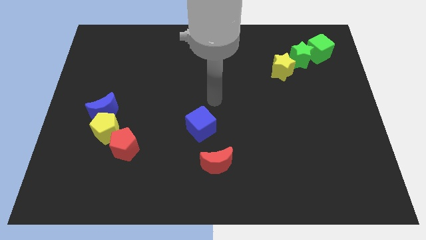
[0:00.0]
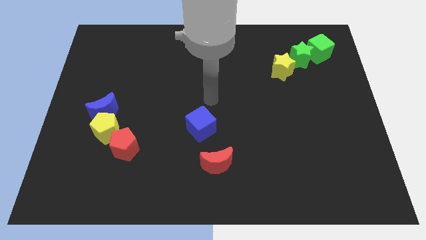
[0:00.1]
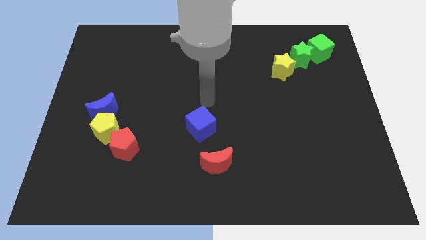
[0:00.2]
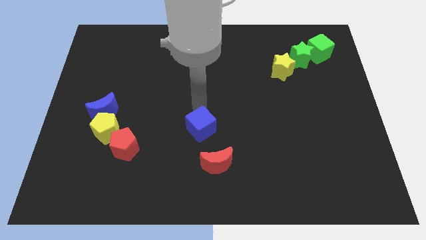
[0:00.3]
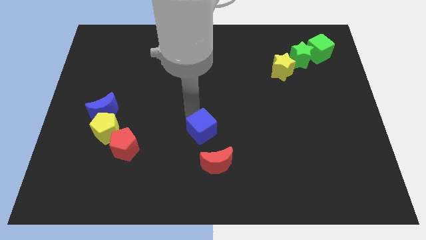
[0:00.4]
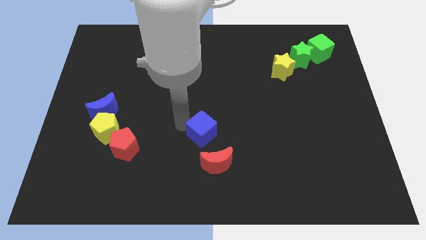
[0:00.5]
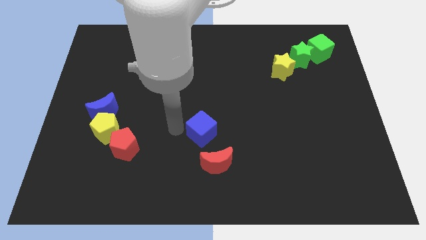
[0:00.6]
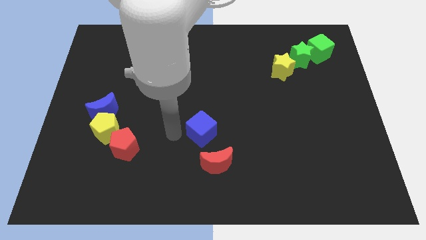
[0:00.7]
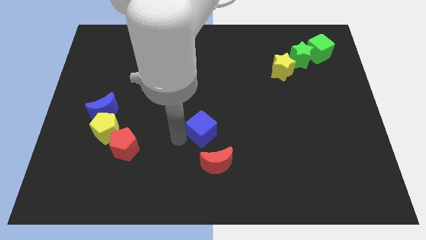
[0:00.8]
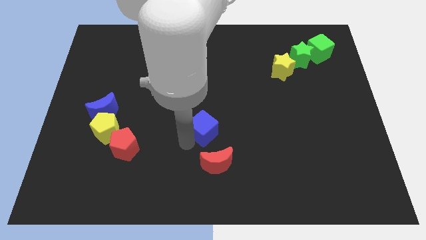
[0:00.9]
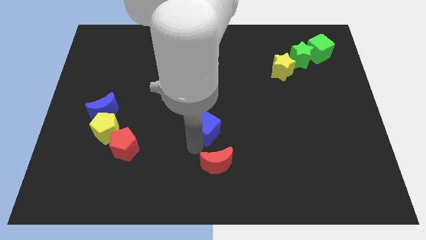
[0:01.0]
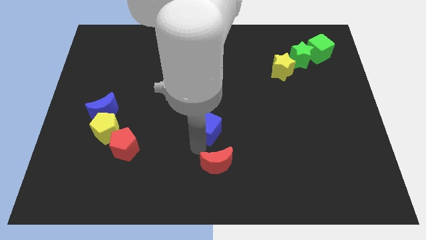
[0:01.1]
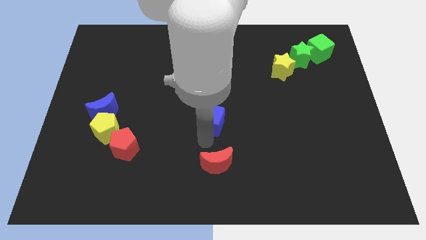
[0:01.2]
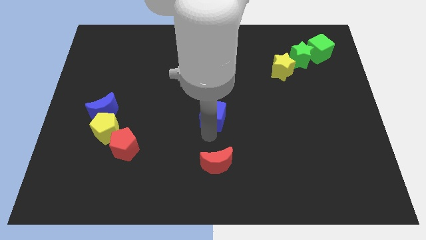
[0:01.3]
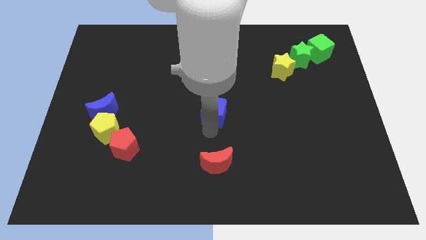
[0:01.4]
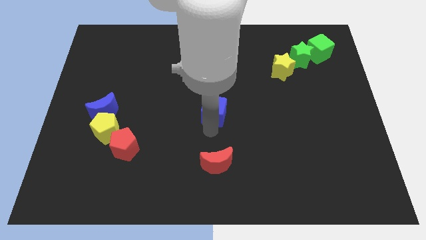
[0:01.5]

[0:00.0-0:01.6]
push the blue cube towards the center of the board

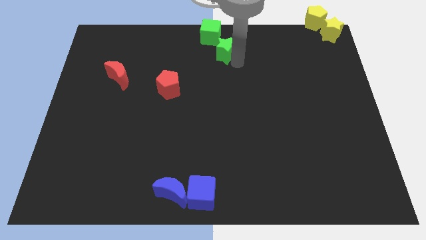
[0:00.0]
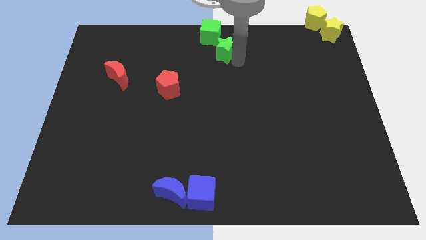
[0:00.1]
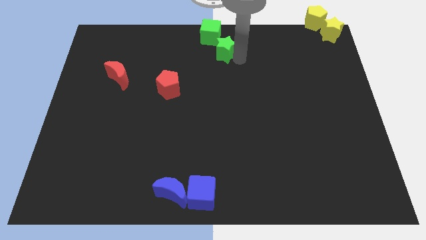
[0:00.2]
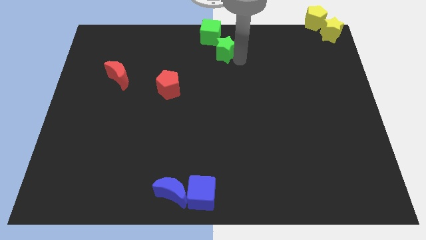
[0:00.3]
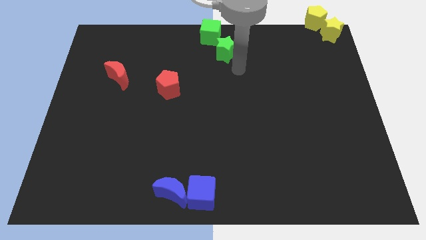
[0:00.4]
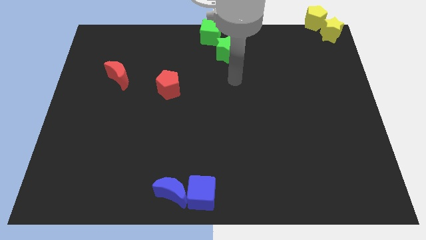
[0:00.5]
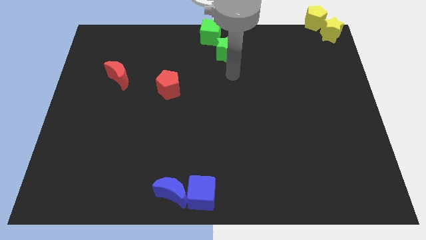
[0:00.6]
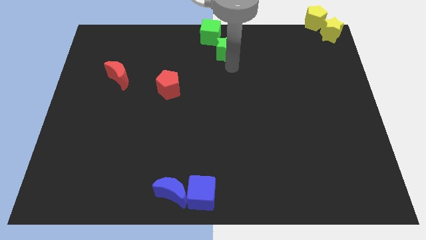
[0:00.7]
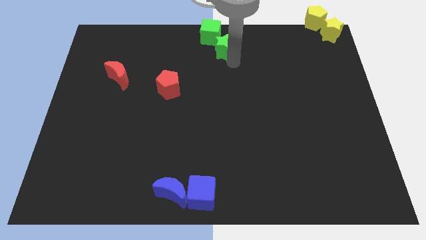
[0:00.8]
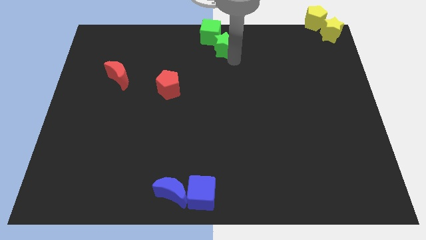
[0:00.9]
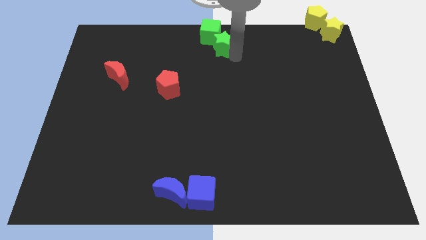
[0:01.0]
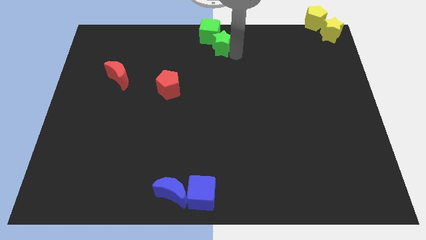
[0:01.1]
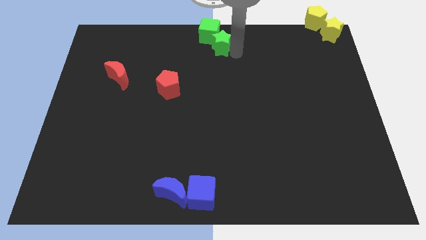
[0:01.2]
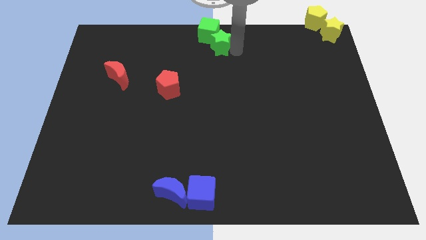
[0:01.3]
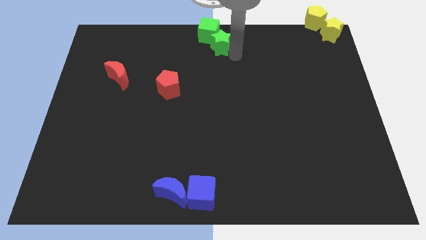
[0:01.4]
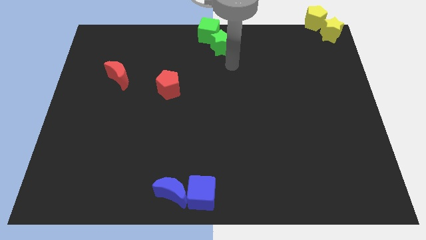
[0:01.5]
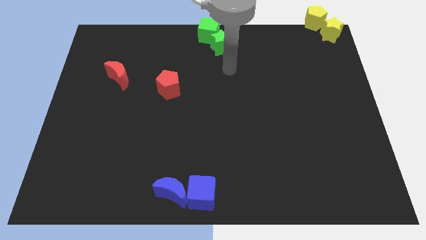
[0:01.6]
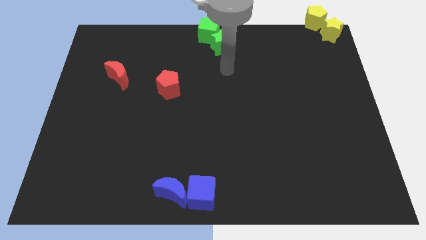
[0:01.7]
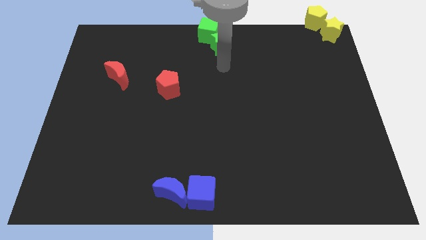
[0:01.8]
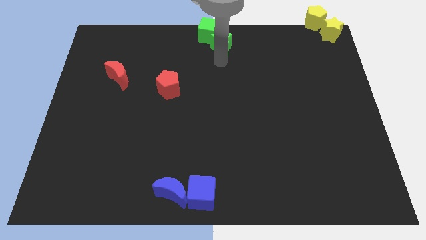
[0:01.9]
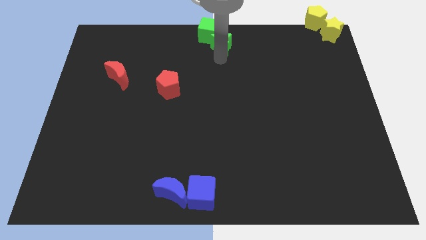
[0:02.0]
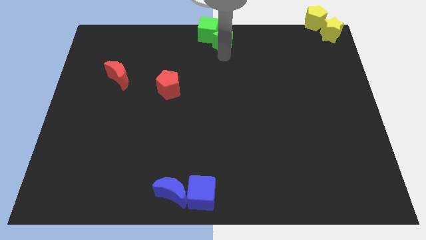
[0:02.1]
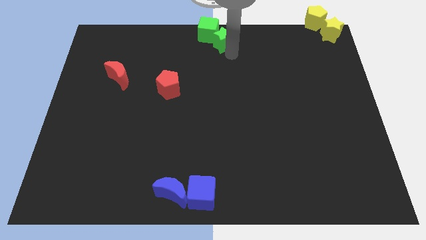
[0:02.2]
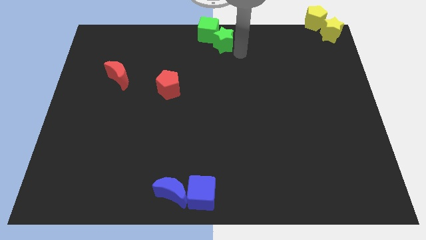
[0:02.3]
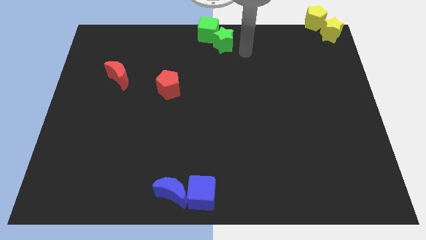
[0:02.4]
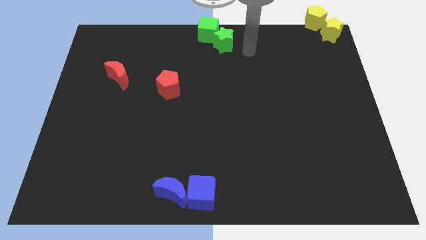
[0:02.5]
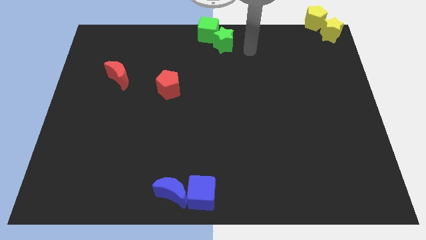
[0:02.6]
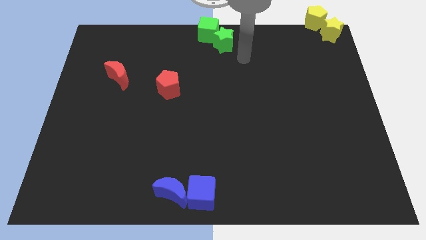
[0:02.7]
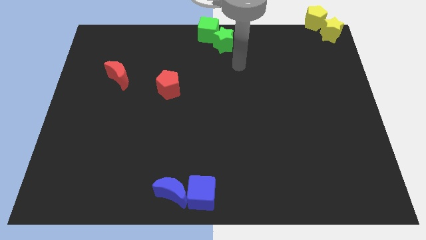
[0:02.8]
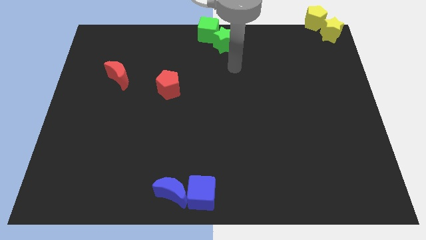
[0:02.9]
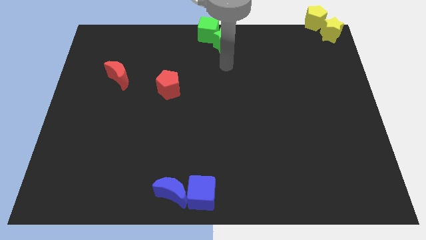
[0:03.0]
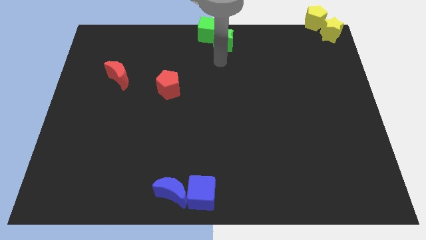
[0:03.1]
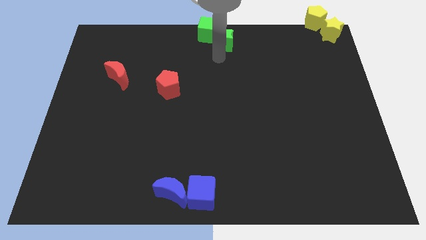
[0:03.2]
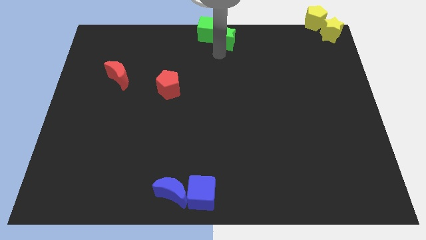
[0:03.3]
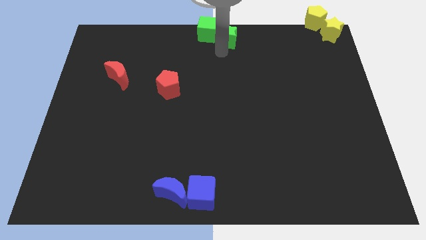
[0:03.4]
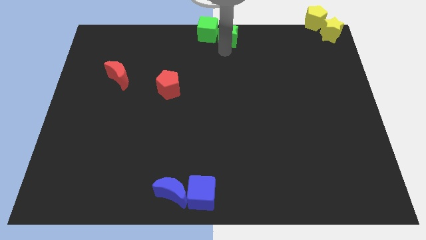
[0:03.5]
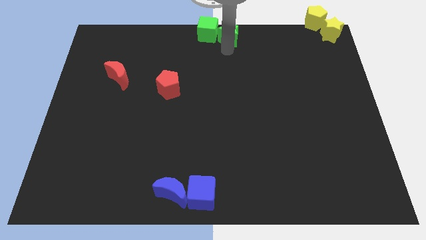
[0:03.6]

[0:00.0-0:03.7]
place green star to the right of green cube

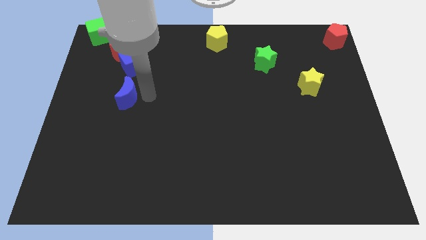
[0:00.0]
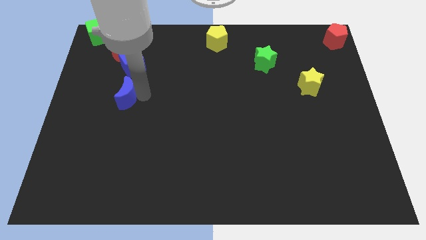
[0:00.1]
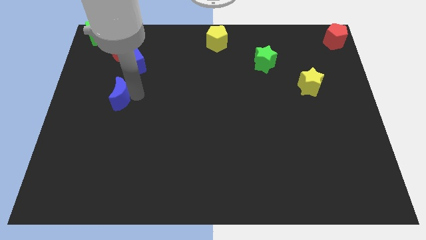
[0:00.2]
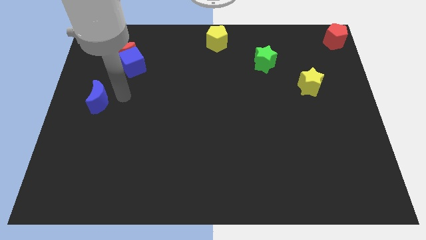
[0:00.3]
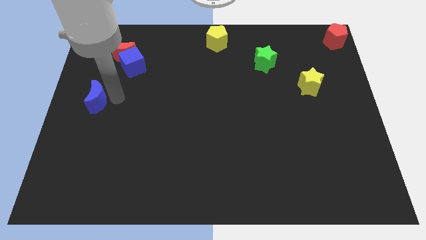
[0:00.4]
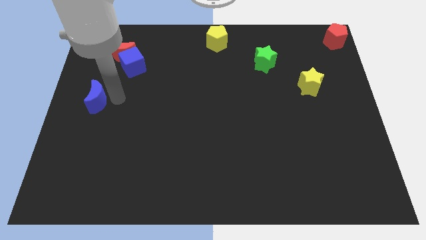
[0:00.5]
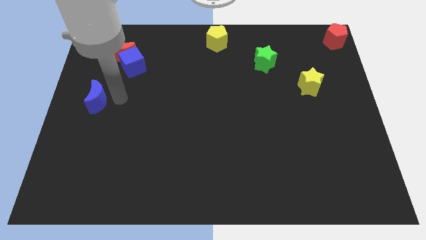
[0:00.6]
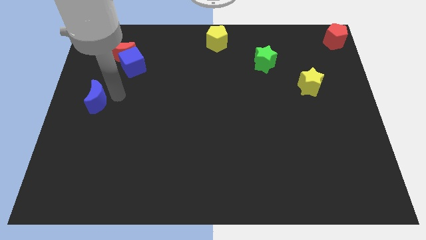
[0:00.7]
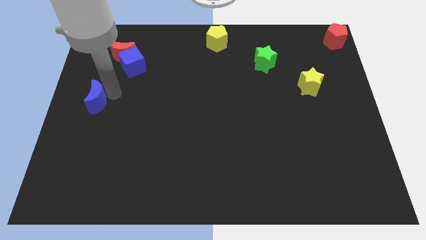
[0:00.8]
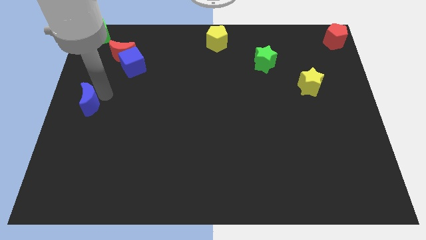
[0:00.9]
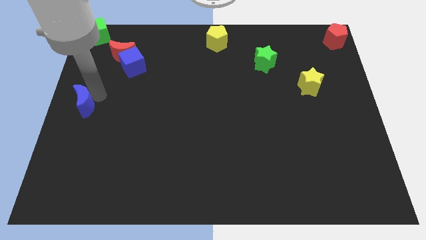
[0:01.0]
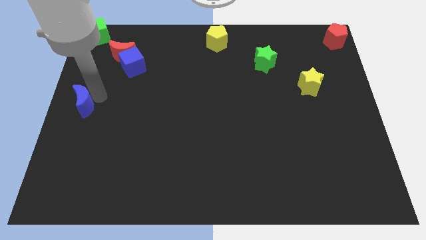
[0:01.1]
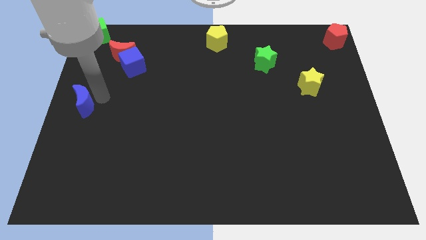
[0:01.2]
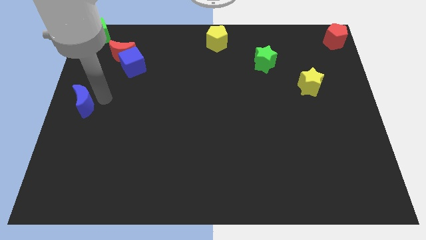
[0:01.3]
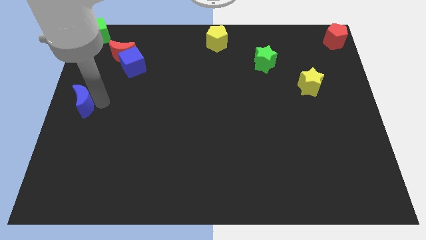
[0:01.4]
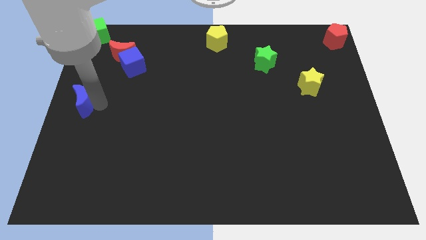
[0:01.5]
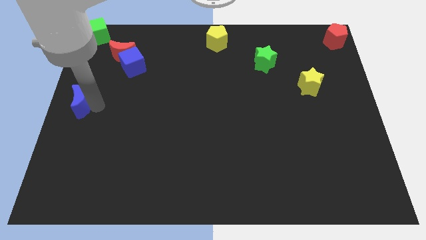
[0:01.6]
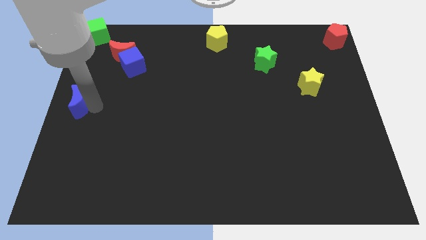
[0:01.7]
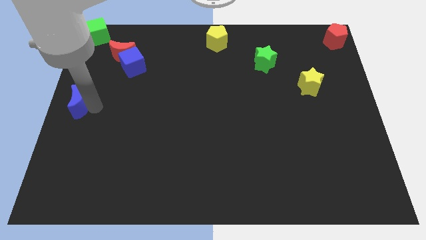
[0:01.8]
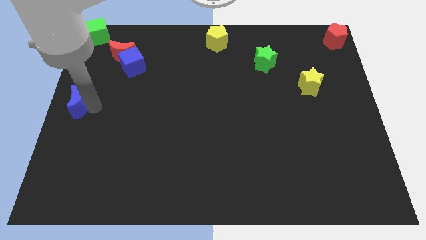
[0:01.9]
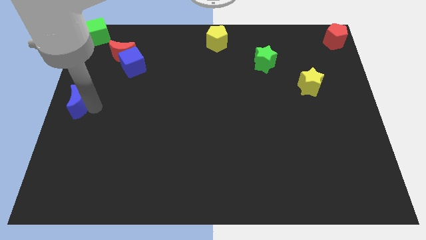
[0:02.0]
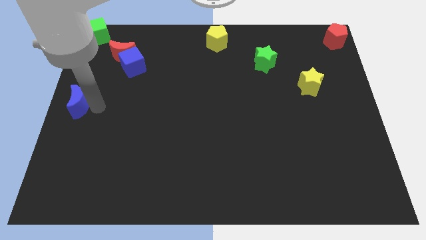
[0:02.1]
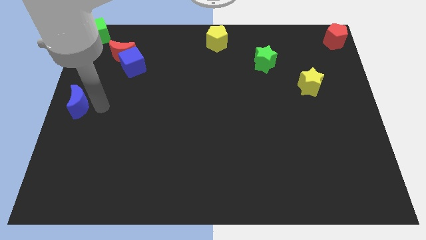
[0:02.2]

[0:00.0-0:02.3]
move blue cube towards the left center of the board

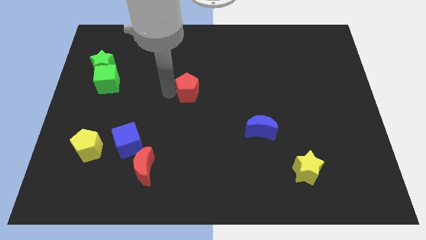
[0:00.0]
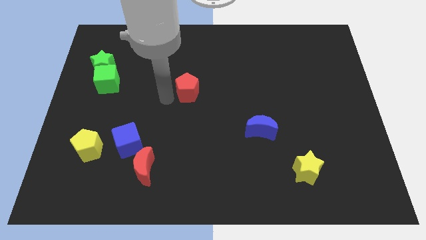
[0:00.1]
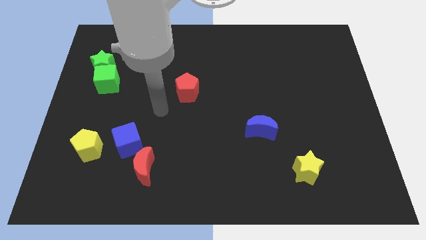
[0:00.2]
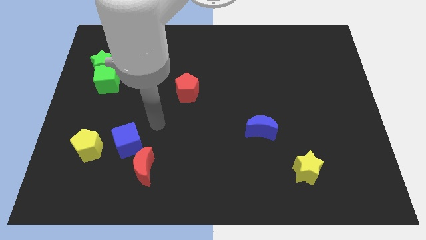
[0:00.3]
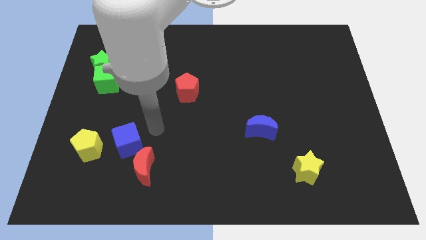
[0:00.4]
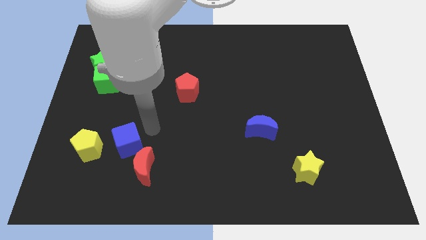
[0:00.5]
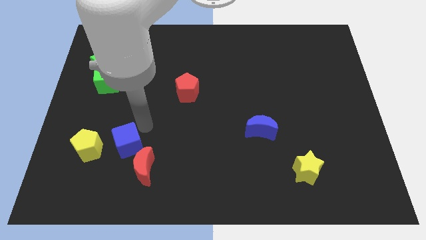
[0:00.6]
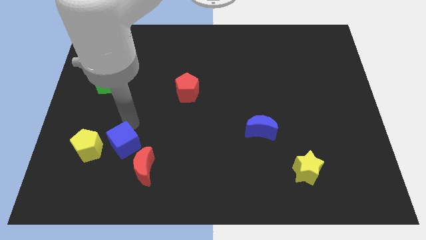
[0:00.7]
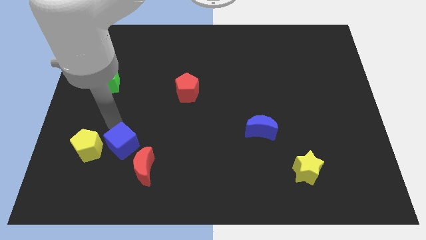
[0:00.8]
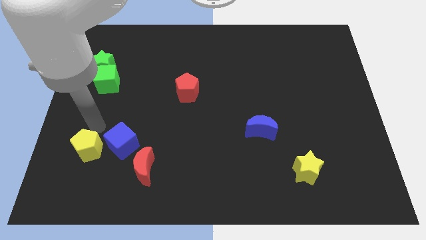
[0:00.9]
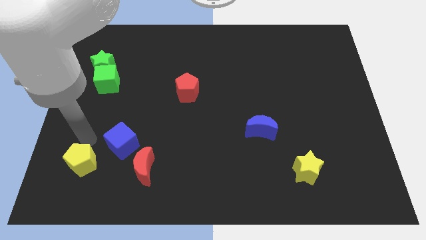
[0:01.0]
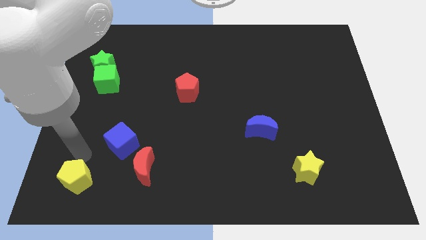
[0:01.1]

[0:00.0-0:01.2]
move your arm left to the blue cube
